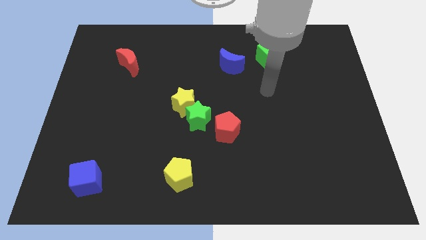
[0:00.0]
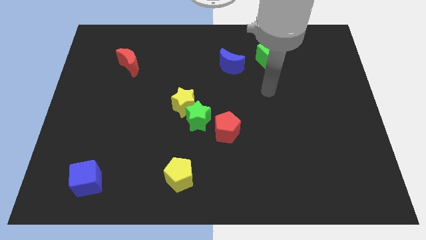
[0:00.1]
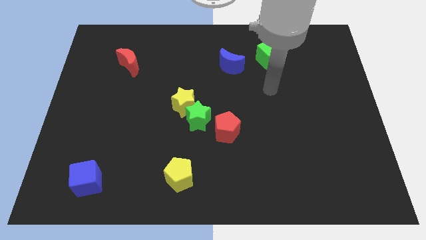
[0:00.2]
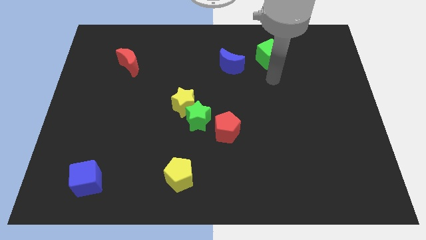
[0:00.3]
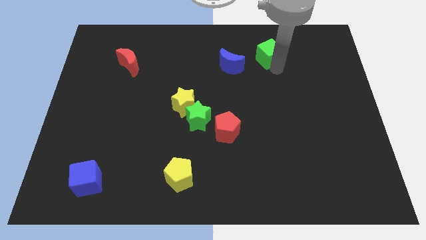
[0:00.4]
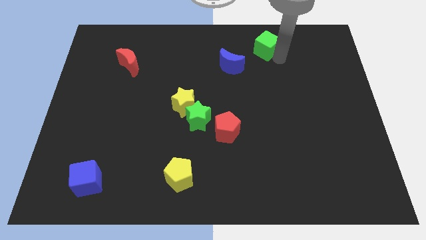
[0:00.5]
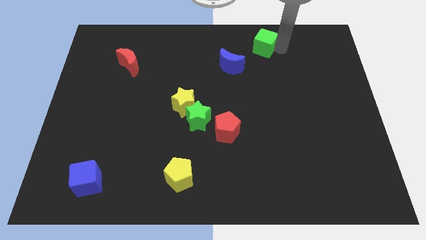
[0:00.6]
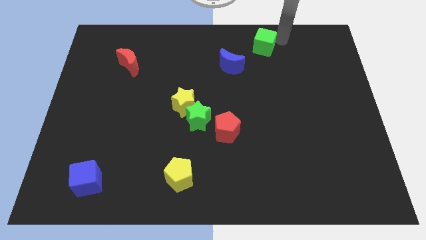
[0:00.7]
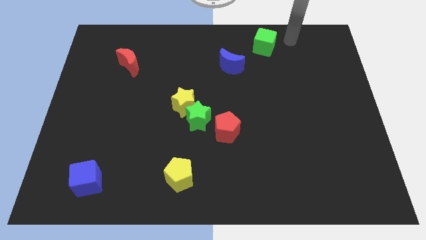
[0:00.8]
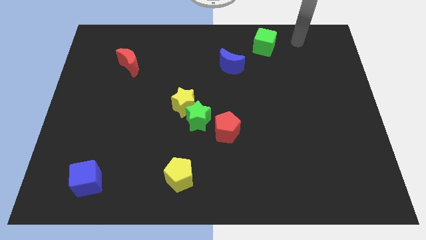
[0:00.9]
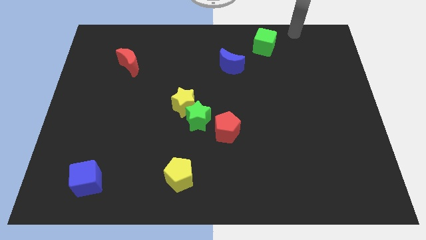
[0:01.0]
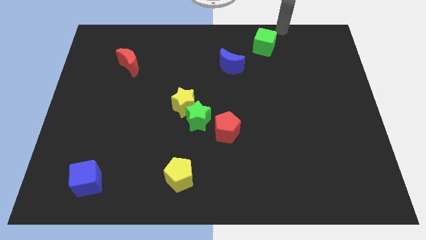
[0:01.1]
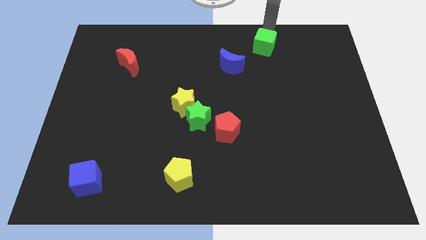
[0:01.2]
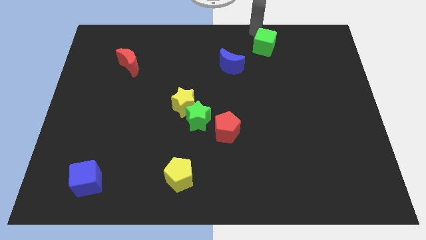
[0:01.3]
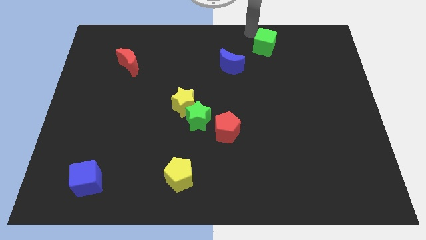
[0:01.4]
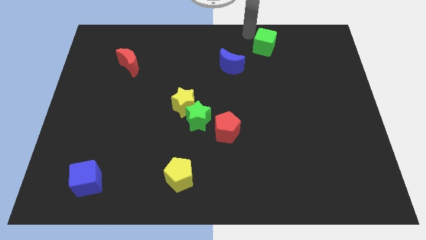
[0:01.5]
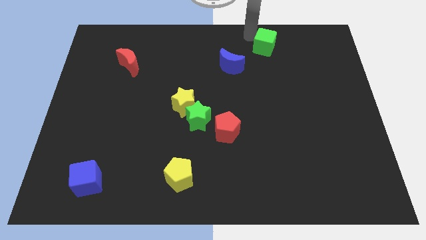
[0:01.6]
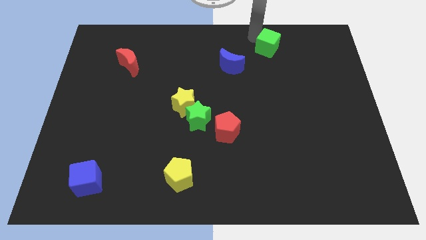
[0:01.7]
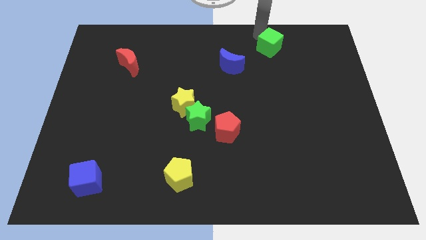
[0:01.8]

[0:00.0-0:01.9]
tap at the top side of the green cube

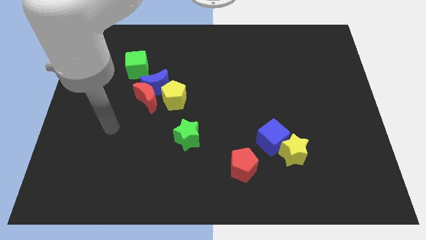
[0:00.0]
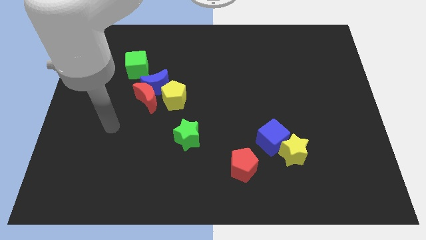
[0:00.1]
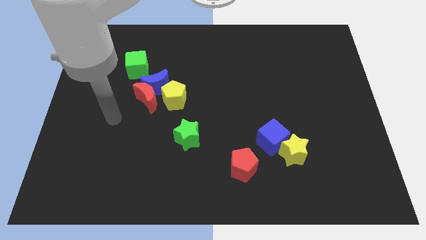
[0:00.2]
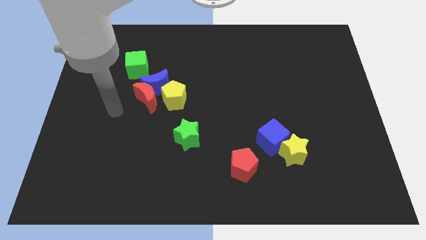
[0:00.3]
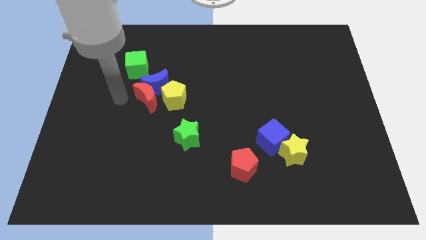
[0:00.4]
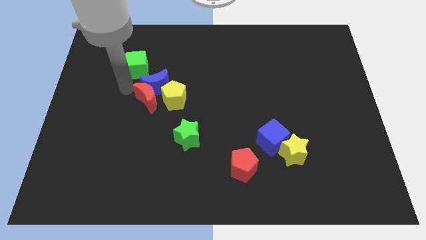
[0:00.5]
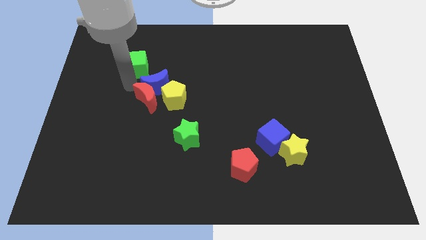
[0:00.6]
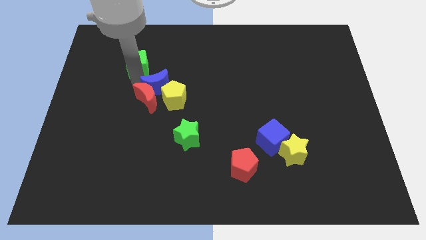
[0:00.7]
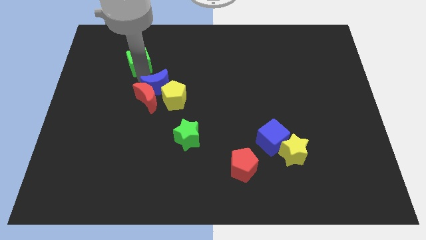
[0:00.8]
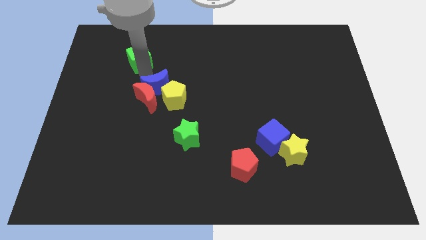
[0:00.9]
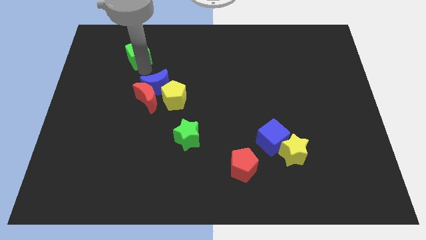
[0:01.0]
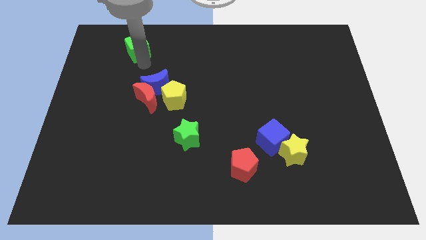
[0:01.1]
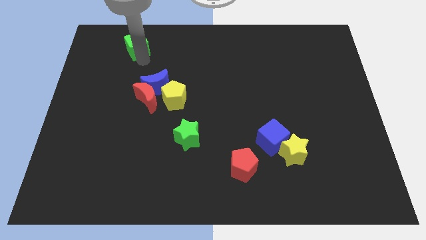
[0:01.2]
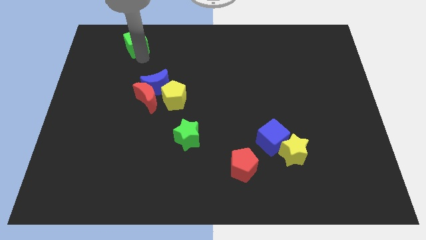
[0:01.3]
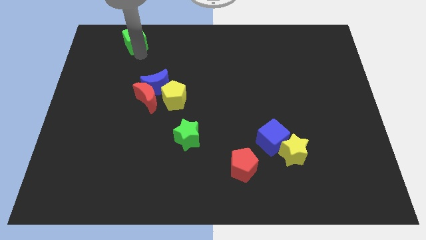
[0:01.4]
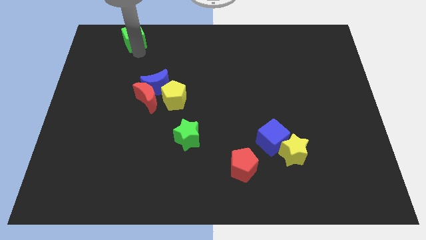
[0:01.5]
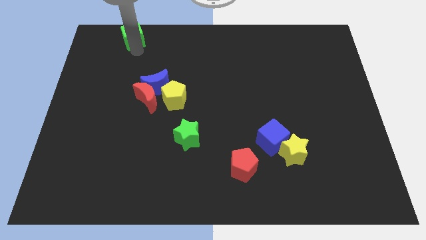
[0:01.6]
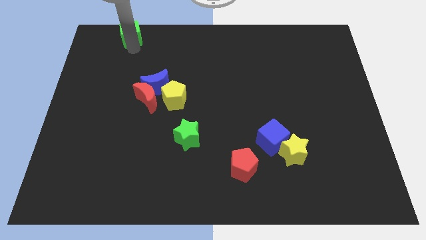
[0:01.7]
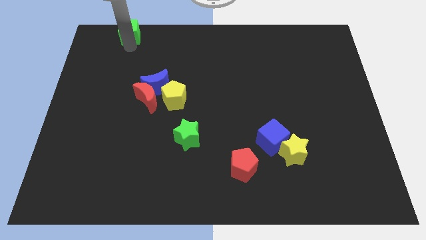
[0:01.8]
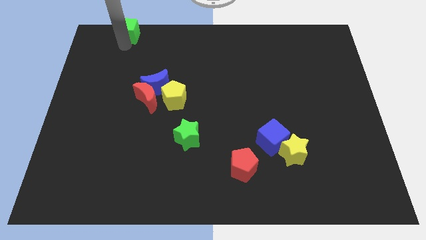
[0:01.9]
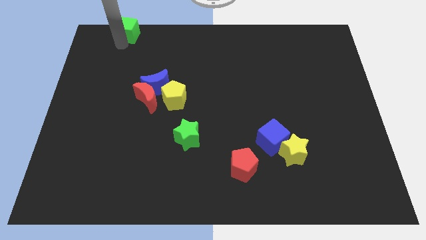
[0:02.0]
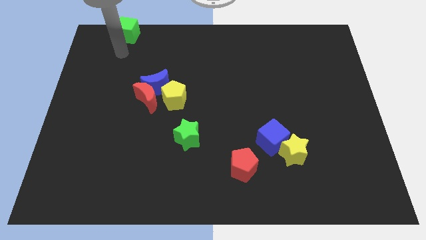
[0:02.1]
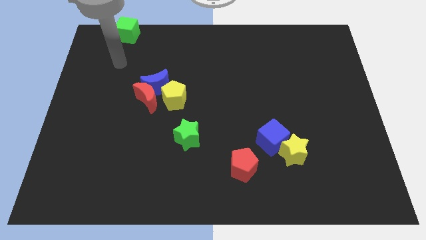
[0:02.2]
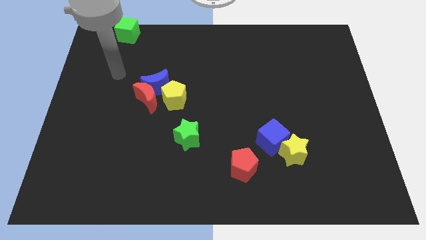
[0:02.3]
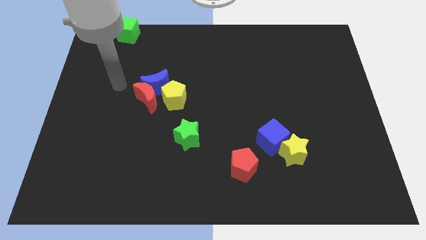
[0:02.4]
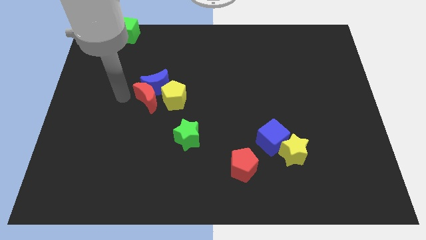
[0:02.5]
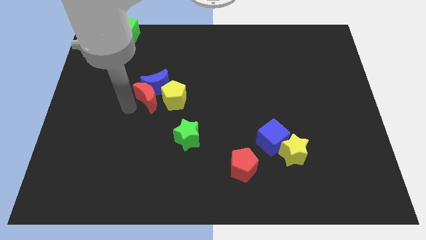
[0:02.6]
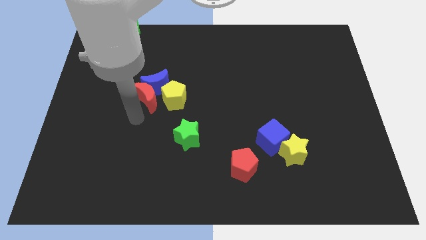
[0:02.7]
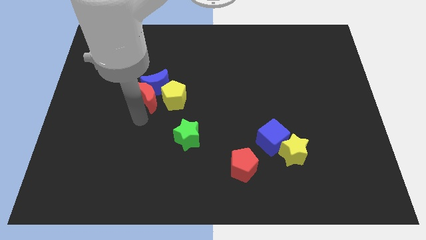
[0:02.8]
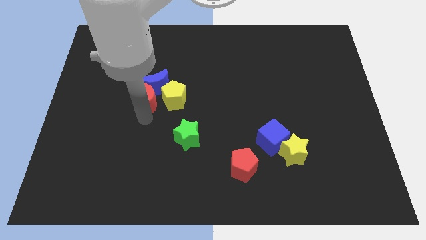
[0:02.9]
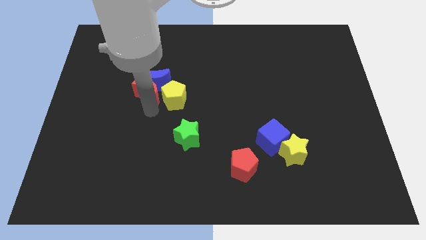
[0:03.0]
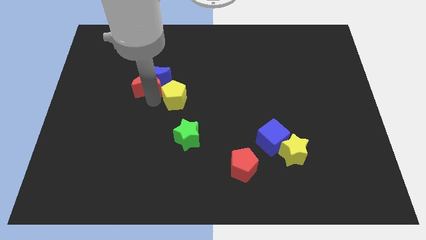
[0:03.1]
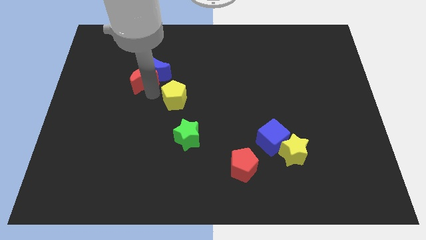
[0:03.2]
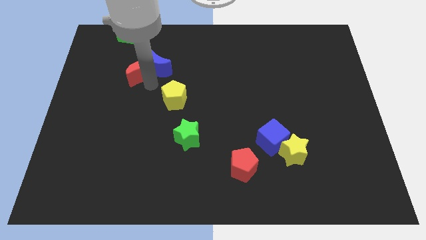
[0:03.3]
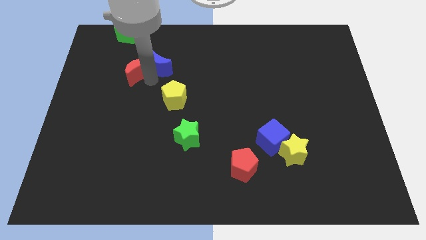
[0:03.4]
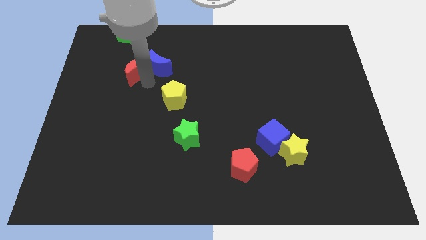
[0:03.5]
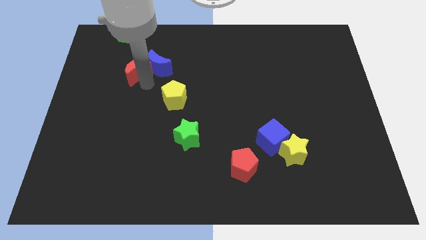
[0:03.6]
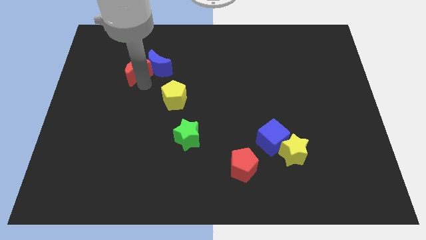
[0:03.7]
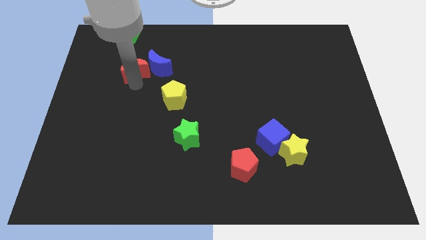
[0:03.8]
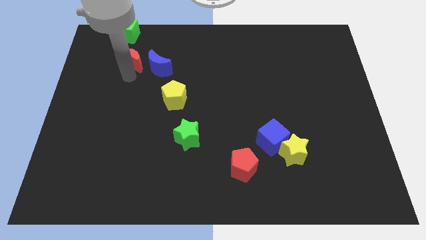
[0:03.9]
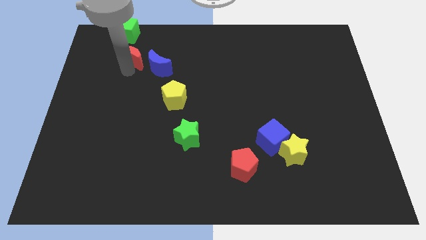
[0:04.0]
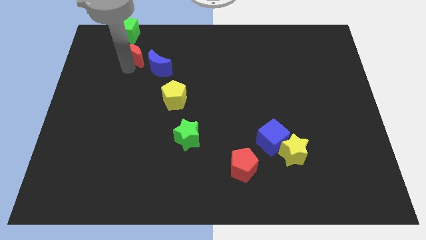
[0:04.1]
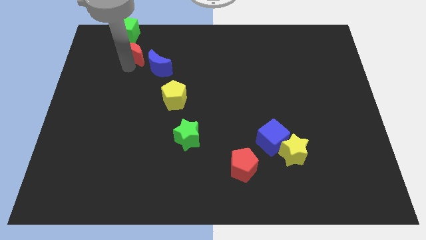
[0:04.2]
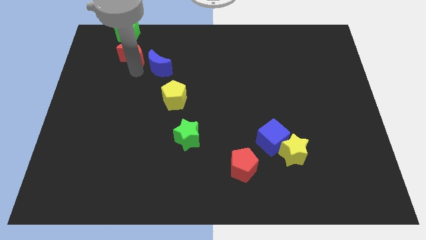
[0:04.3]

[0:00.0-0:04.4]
slide the green cube and the red crescent to the top left of the board

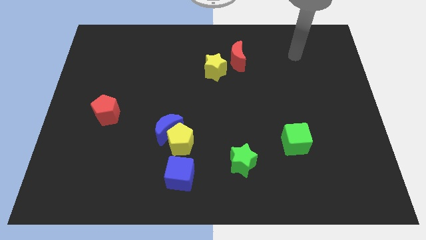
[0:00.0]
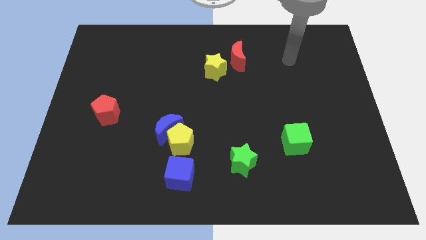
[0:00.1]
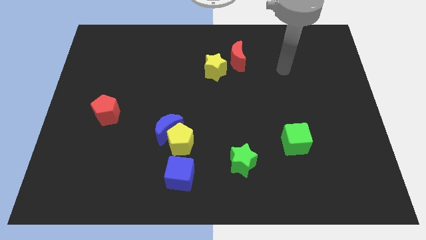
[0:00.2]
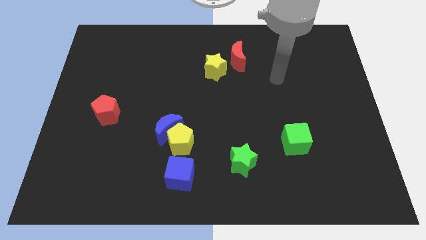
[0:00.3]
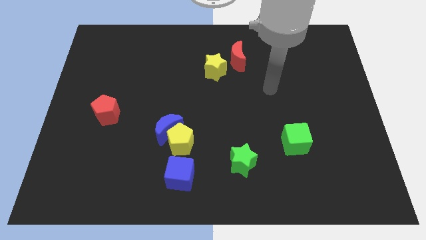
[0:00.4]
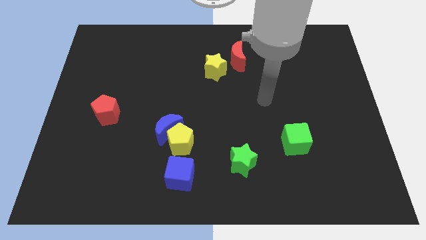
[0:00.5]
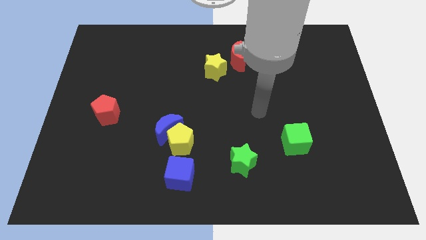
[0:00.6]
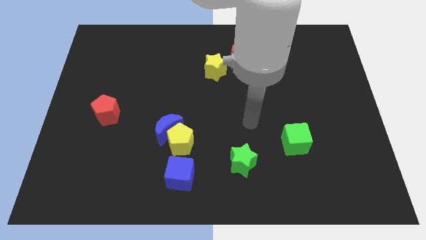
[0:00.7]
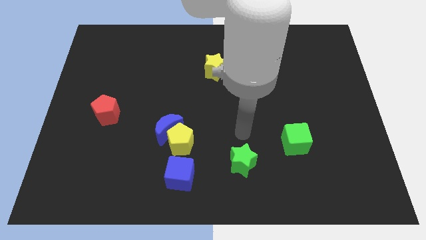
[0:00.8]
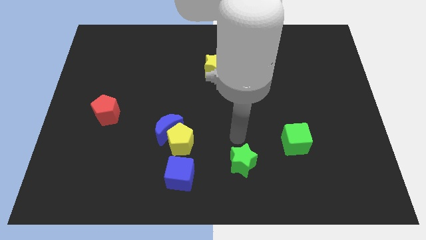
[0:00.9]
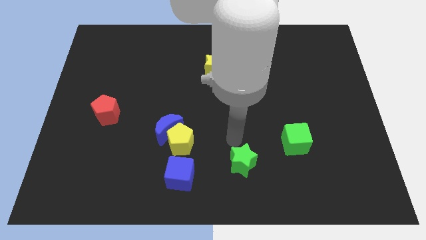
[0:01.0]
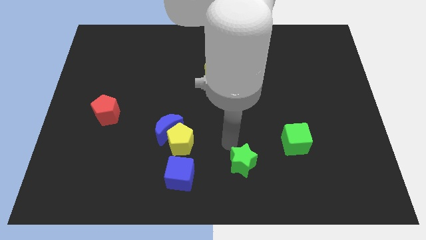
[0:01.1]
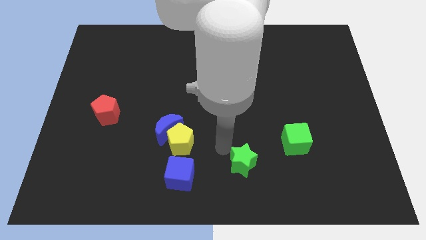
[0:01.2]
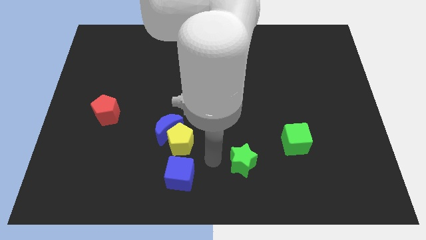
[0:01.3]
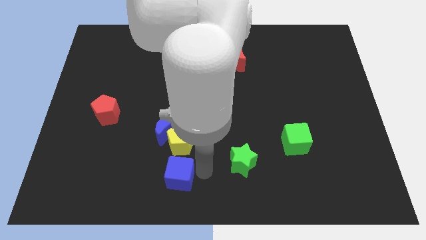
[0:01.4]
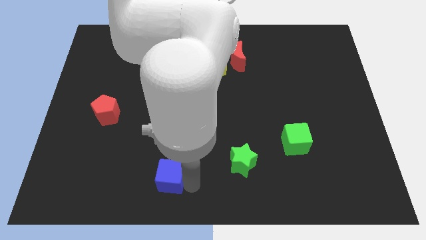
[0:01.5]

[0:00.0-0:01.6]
move the arm right to the blue cube

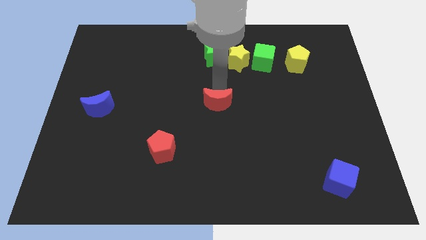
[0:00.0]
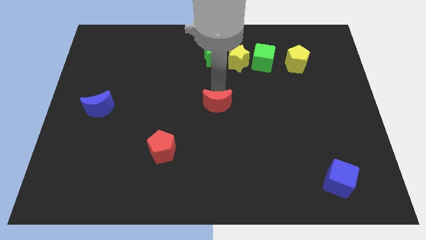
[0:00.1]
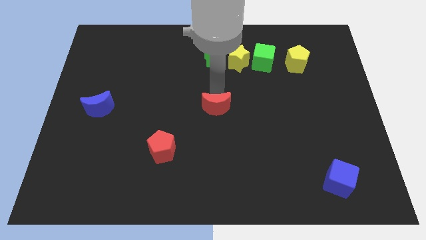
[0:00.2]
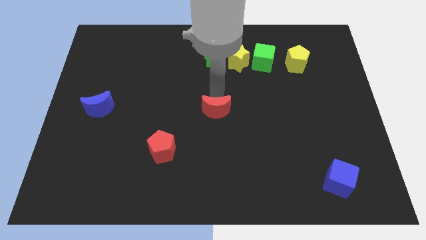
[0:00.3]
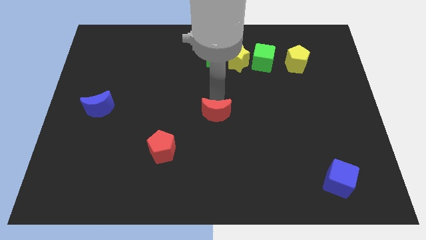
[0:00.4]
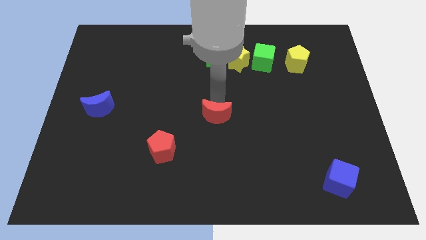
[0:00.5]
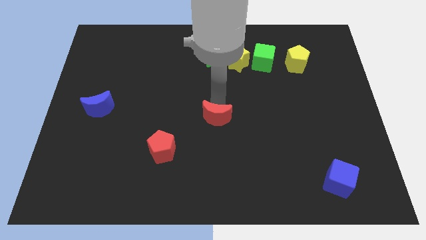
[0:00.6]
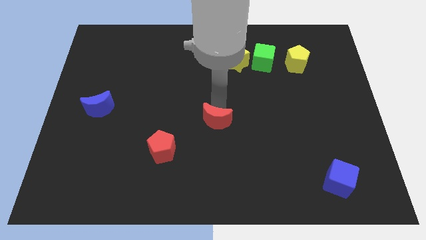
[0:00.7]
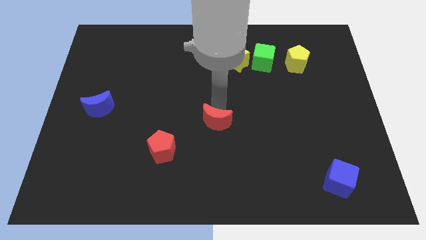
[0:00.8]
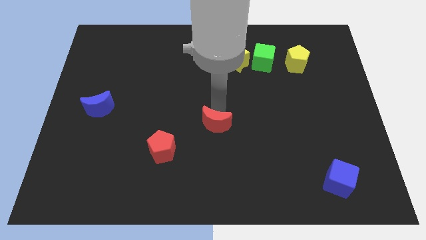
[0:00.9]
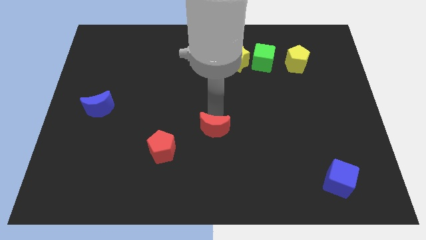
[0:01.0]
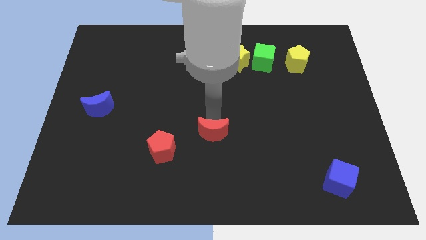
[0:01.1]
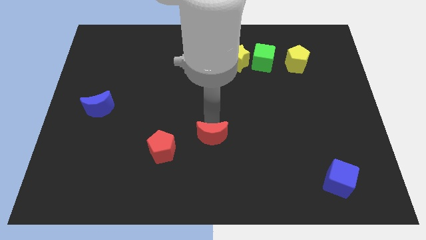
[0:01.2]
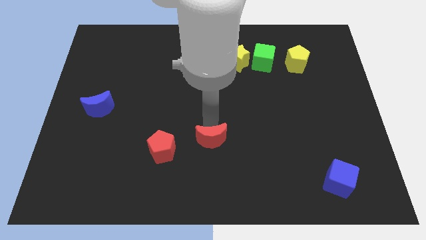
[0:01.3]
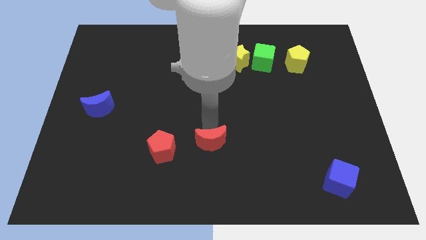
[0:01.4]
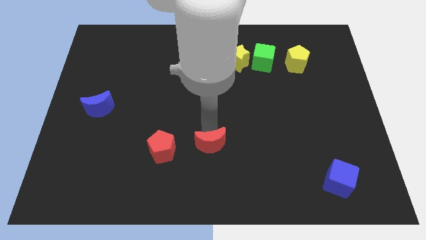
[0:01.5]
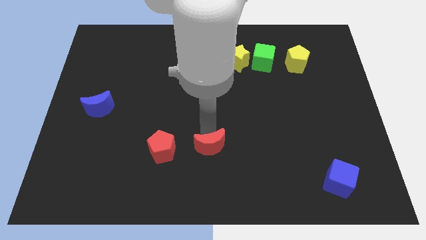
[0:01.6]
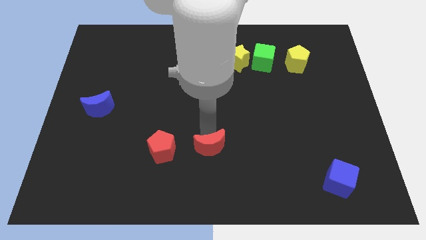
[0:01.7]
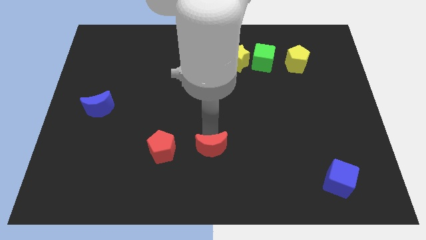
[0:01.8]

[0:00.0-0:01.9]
place the red crescent horizontally to the right side of the red pentagon
